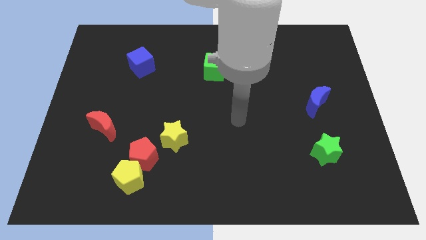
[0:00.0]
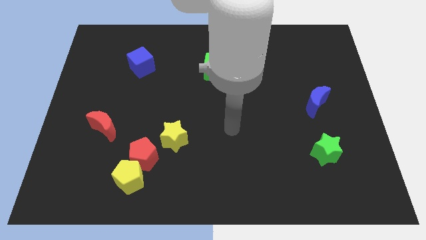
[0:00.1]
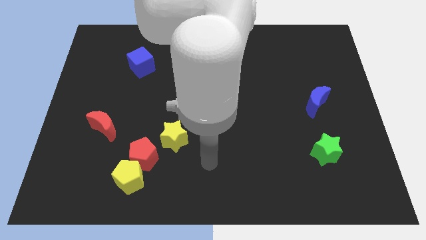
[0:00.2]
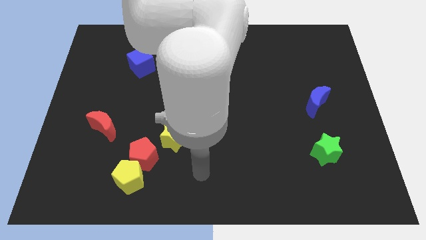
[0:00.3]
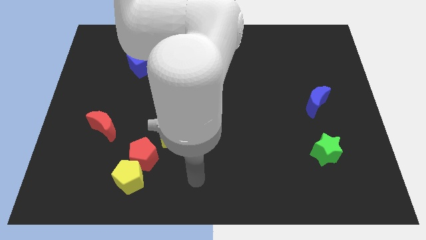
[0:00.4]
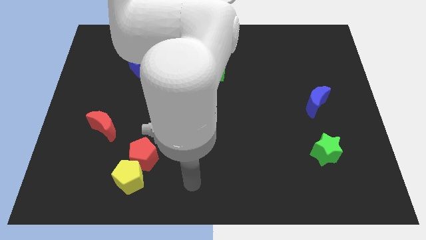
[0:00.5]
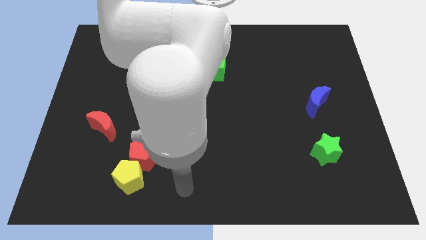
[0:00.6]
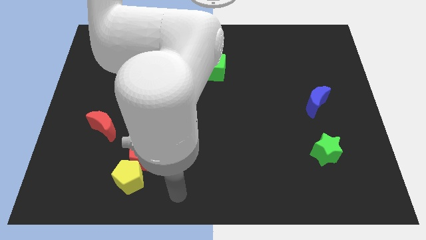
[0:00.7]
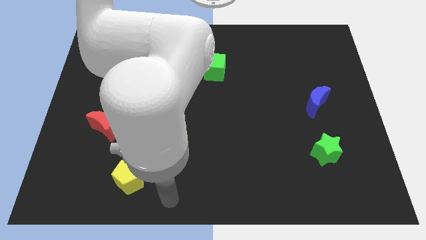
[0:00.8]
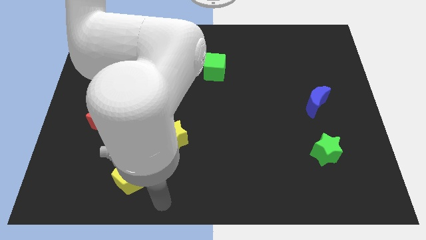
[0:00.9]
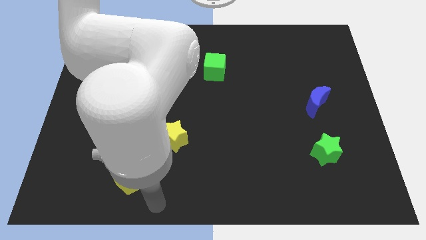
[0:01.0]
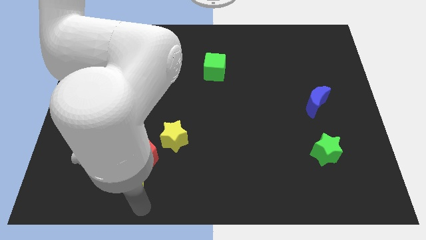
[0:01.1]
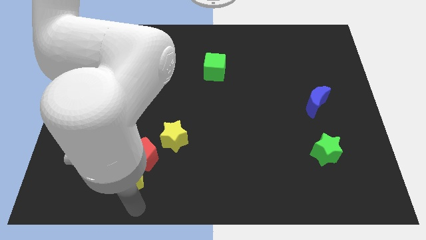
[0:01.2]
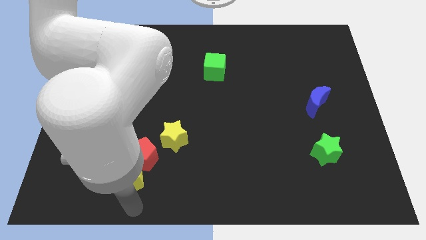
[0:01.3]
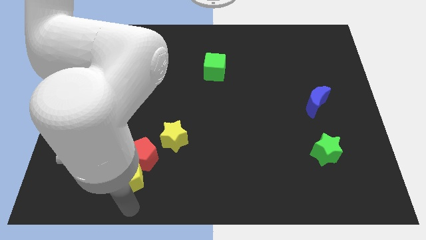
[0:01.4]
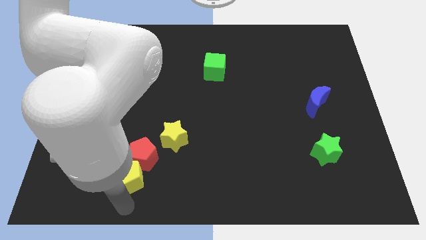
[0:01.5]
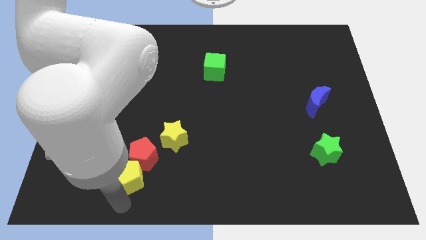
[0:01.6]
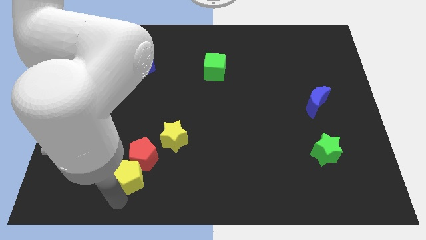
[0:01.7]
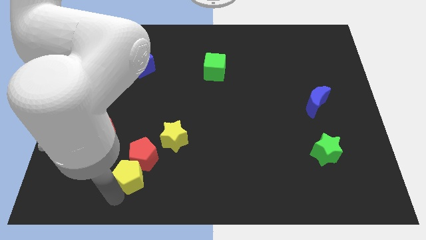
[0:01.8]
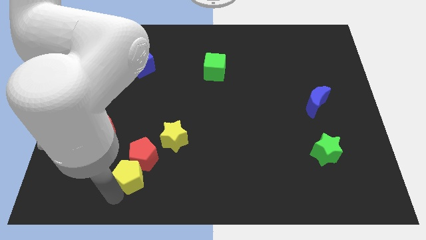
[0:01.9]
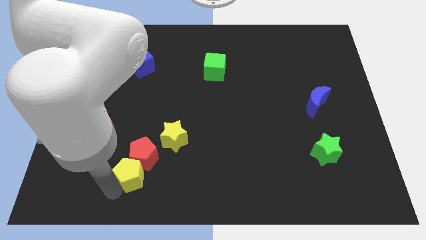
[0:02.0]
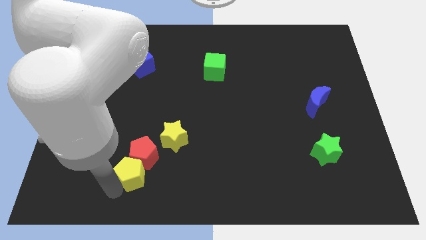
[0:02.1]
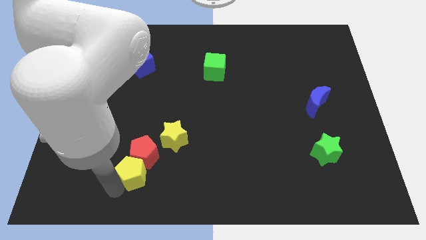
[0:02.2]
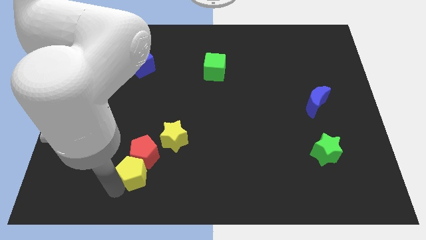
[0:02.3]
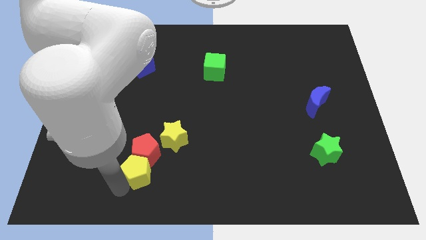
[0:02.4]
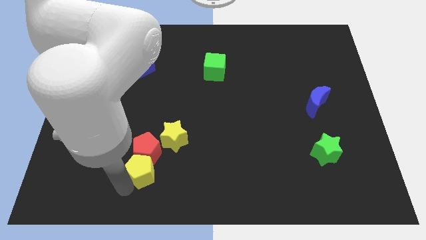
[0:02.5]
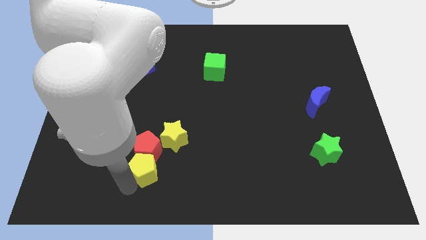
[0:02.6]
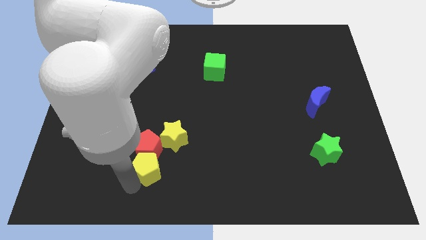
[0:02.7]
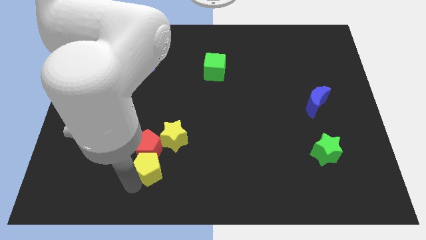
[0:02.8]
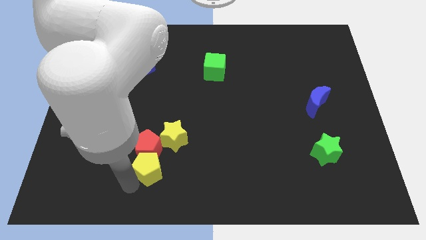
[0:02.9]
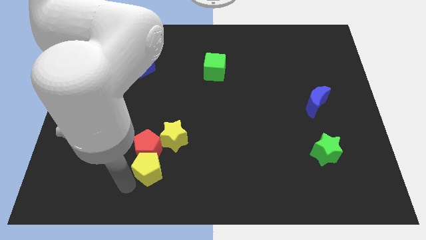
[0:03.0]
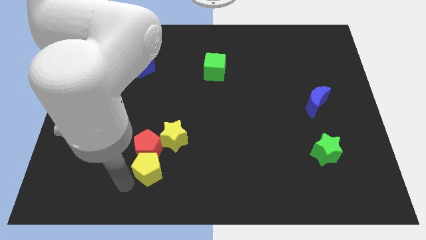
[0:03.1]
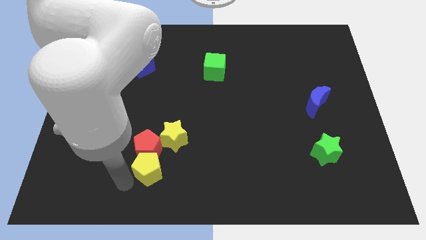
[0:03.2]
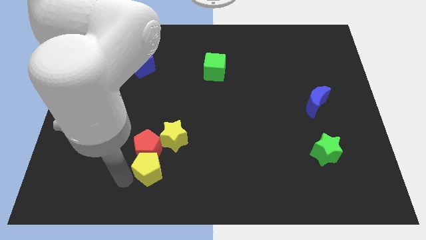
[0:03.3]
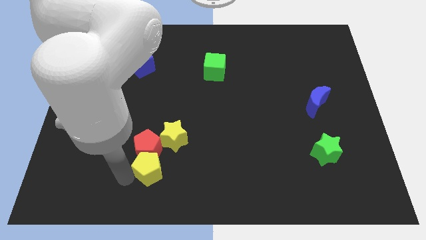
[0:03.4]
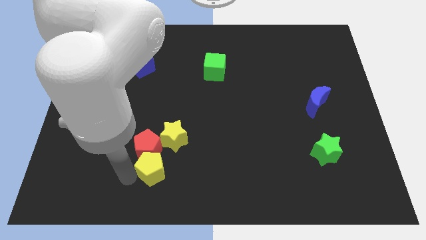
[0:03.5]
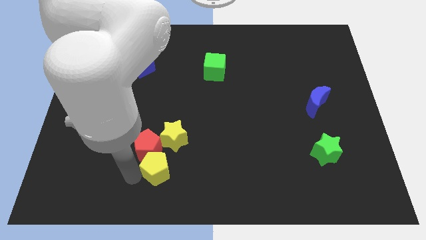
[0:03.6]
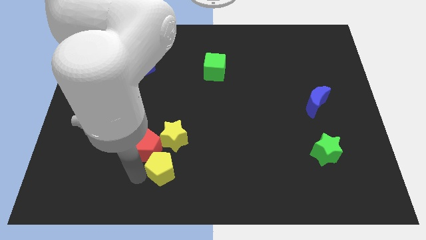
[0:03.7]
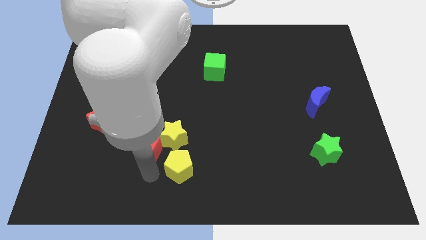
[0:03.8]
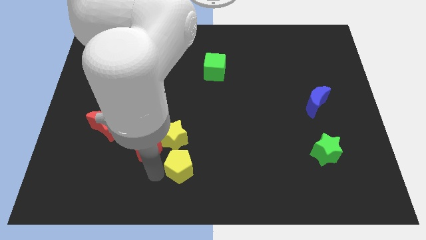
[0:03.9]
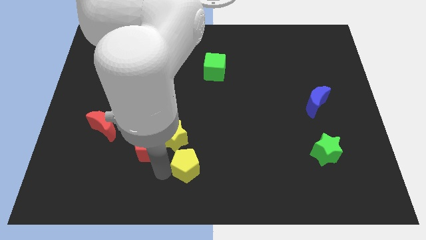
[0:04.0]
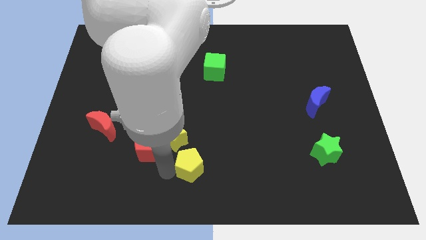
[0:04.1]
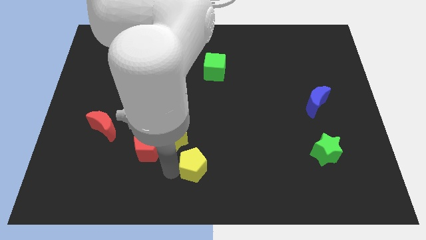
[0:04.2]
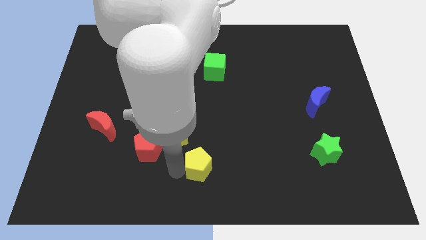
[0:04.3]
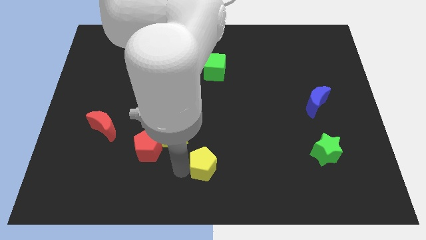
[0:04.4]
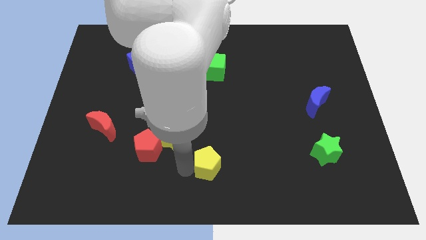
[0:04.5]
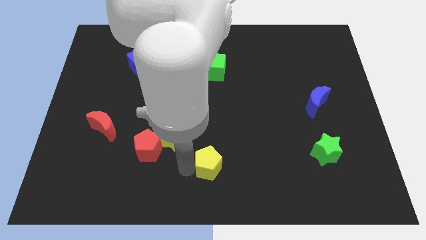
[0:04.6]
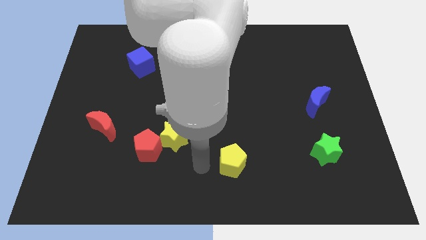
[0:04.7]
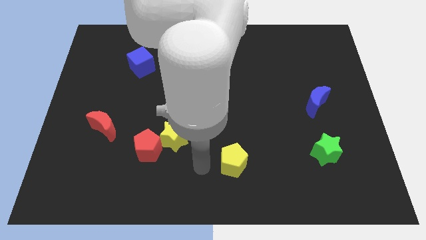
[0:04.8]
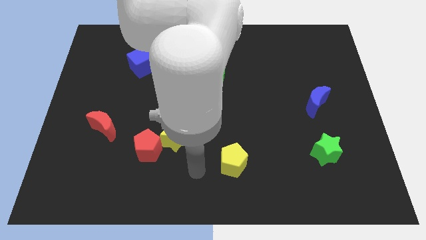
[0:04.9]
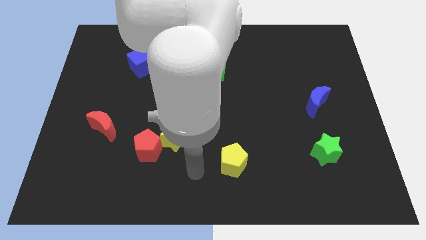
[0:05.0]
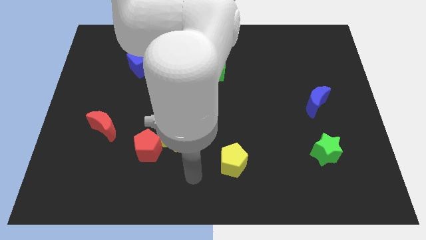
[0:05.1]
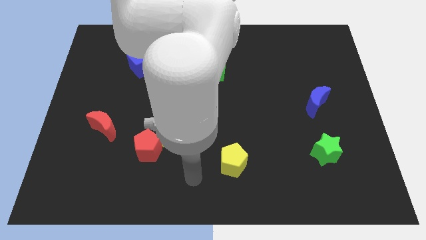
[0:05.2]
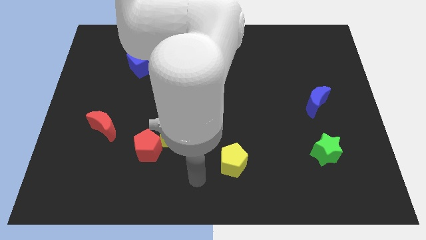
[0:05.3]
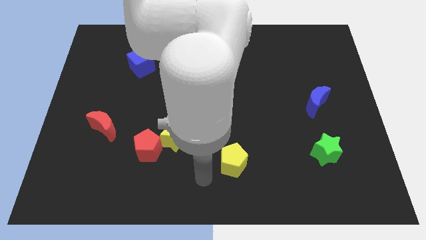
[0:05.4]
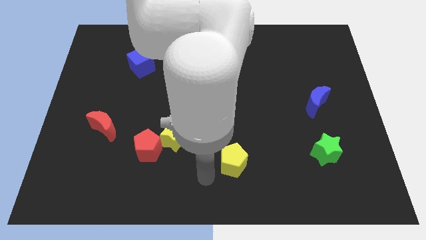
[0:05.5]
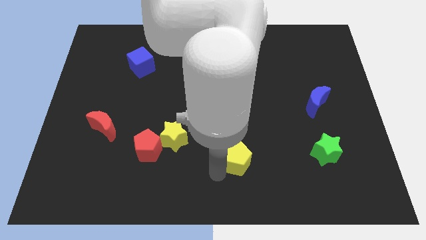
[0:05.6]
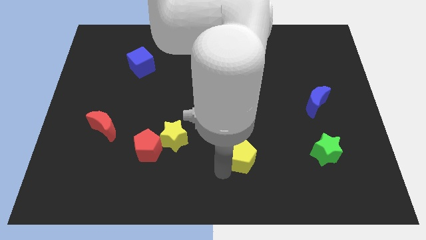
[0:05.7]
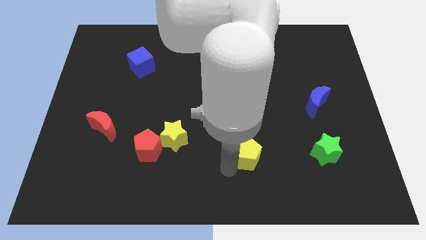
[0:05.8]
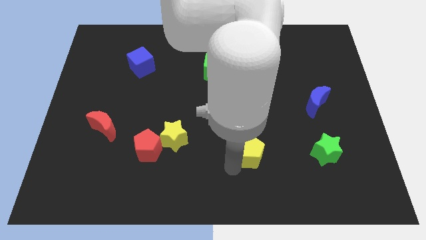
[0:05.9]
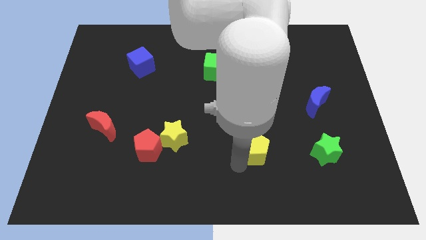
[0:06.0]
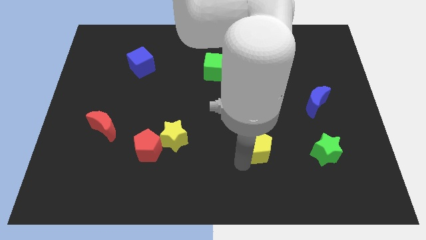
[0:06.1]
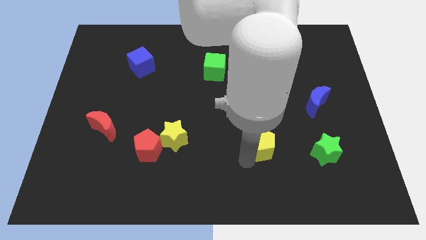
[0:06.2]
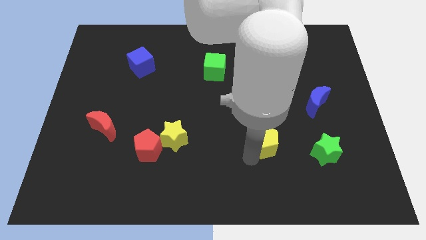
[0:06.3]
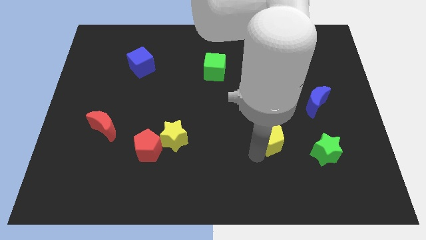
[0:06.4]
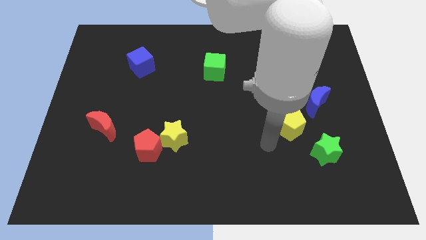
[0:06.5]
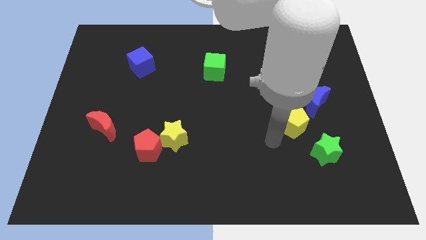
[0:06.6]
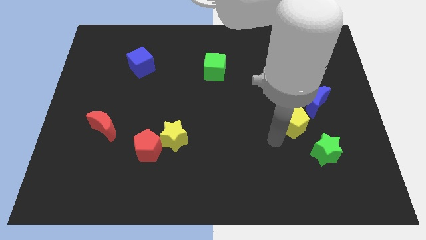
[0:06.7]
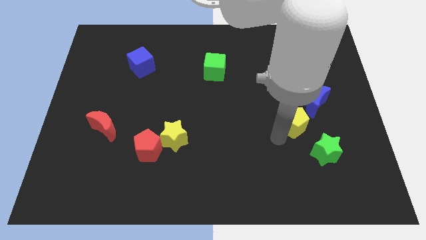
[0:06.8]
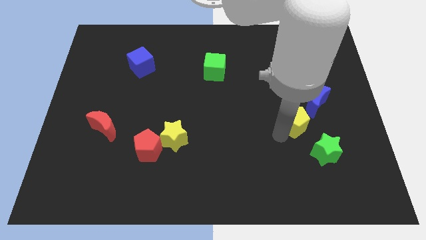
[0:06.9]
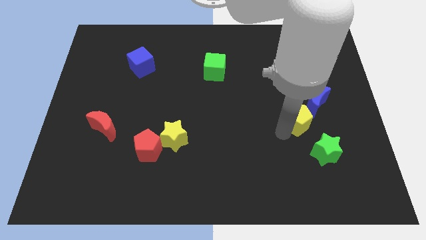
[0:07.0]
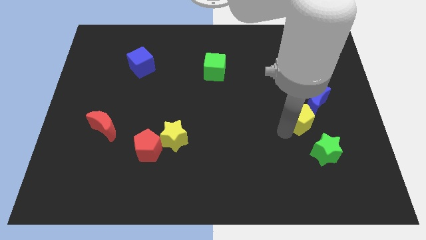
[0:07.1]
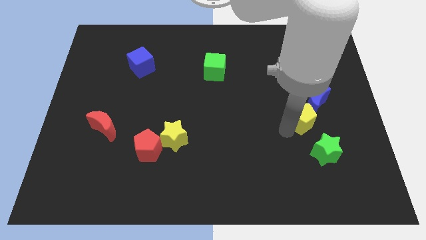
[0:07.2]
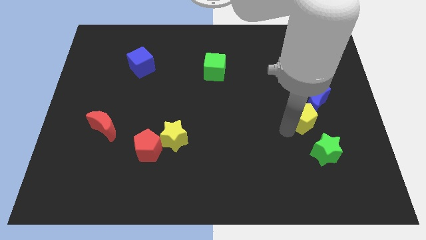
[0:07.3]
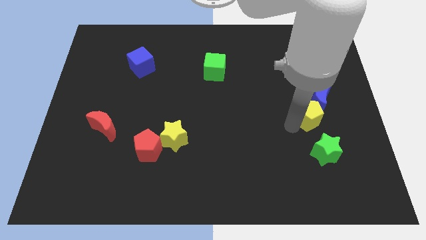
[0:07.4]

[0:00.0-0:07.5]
slide the yellow pentagon towards the blue moon

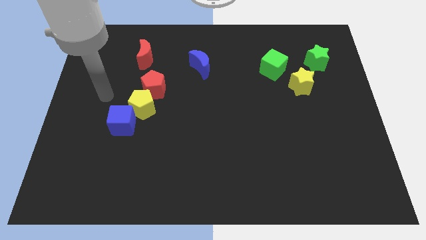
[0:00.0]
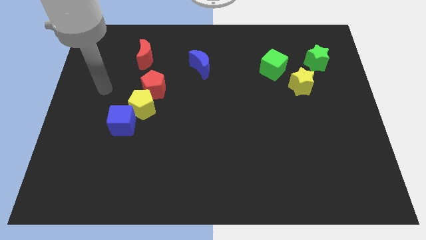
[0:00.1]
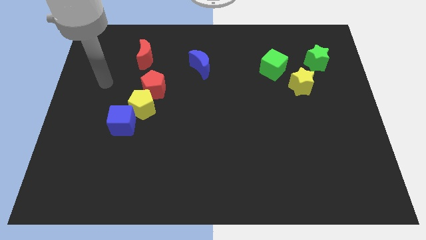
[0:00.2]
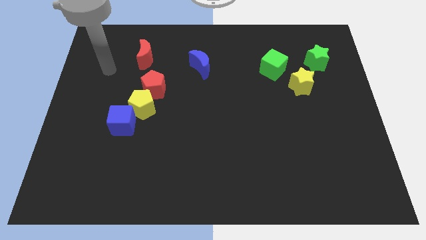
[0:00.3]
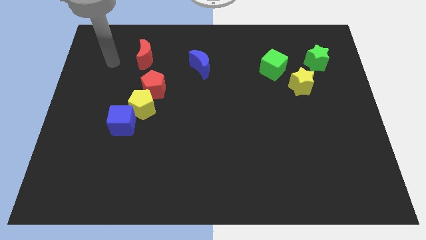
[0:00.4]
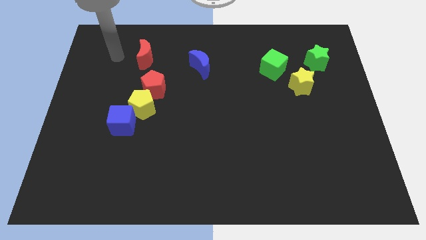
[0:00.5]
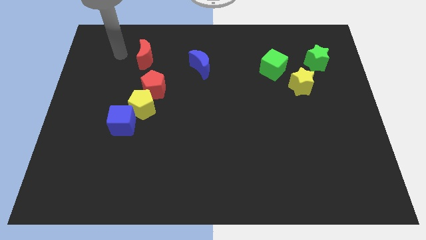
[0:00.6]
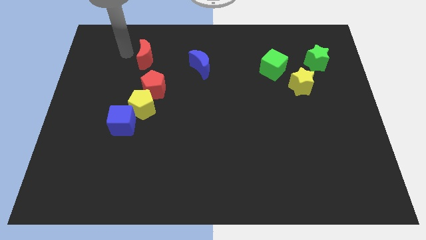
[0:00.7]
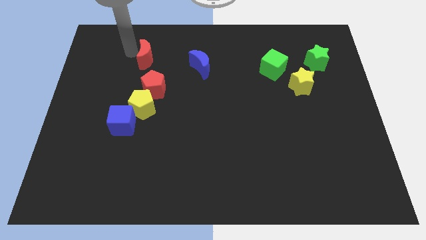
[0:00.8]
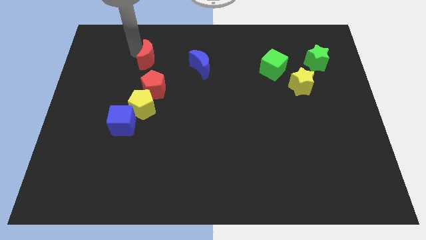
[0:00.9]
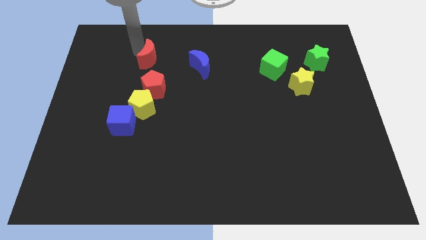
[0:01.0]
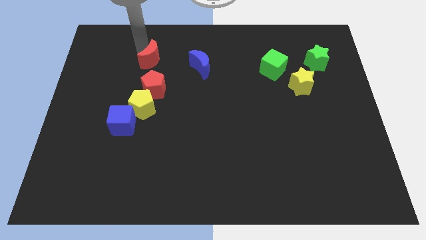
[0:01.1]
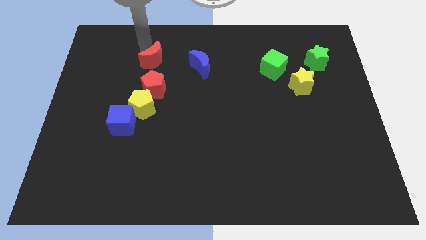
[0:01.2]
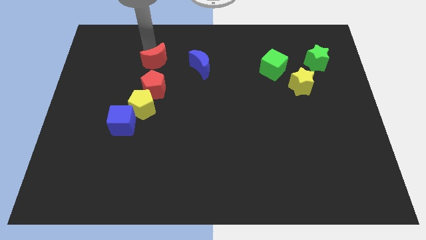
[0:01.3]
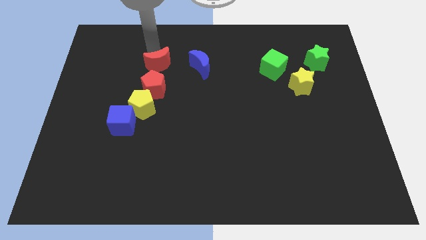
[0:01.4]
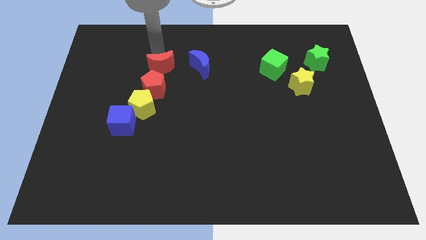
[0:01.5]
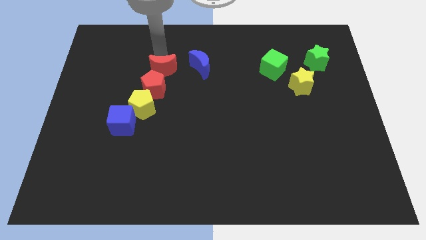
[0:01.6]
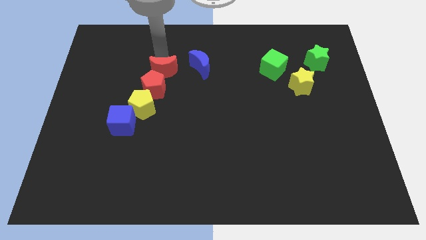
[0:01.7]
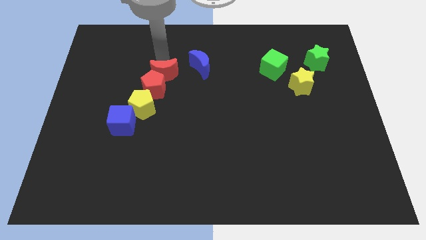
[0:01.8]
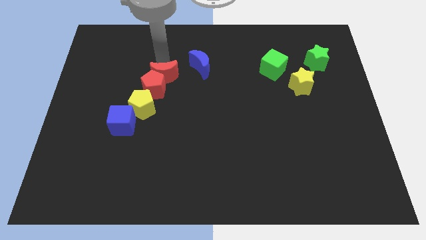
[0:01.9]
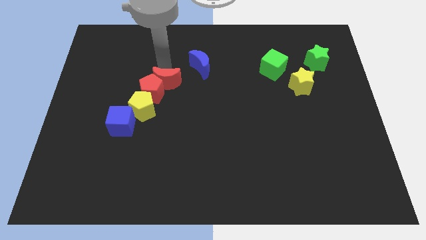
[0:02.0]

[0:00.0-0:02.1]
move the red moon close to the red pentagon
